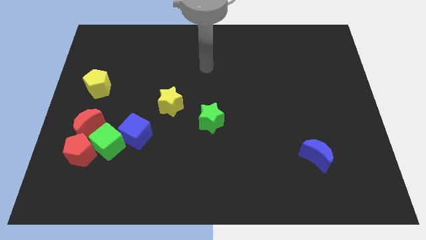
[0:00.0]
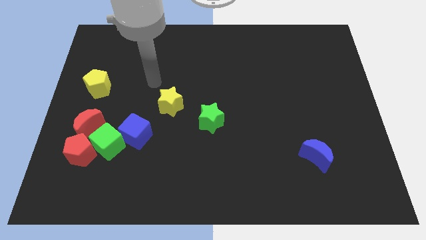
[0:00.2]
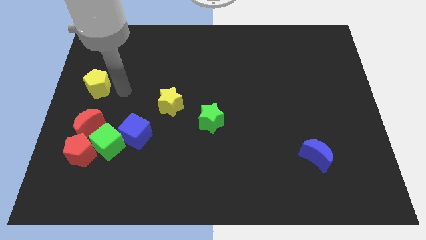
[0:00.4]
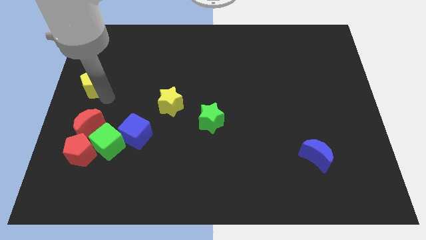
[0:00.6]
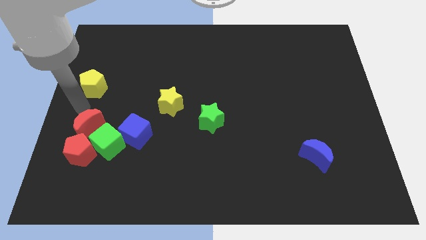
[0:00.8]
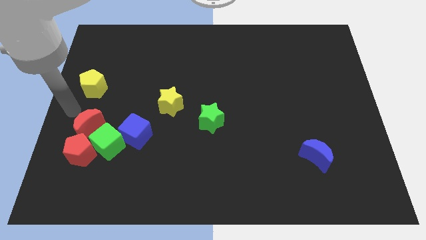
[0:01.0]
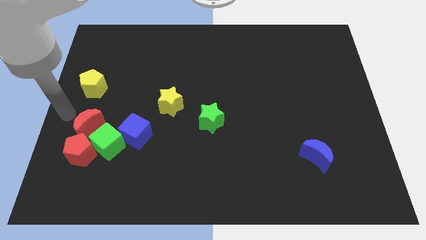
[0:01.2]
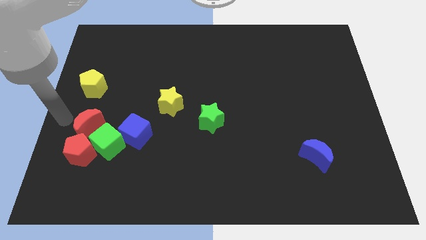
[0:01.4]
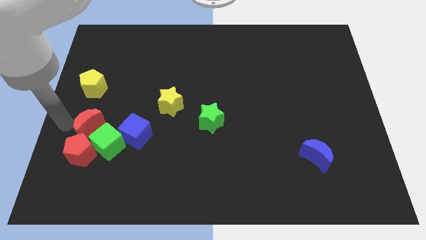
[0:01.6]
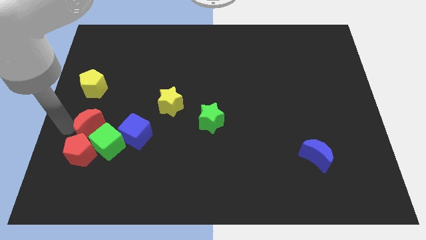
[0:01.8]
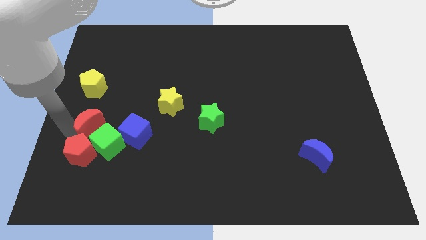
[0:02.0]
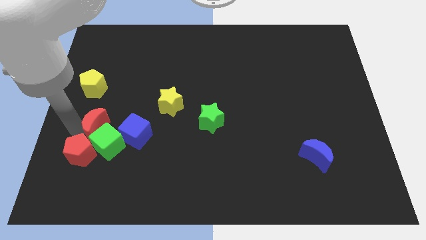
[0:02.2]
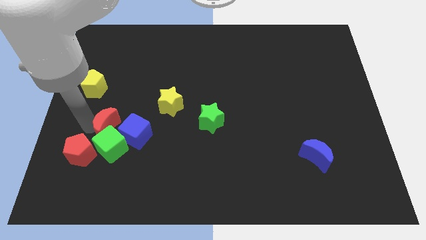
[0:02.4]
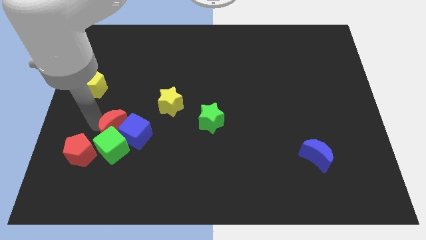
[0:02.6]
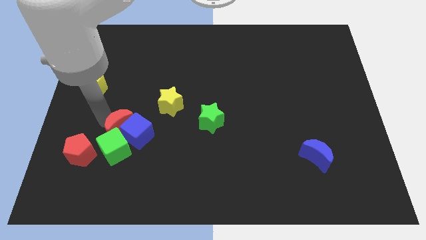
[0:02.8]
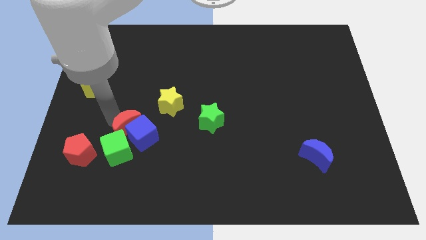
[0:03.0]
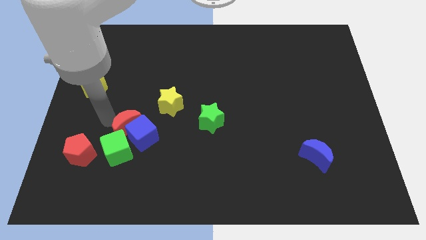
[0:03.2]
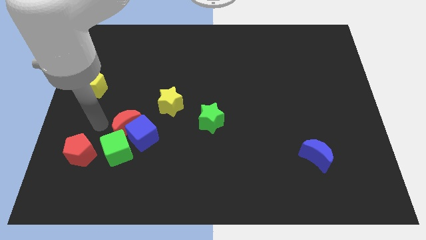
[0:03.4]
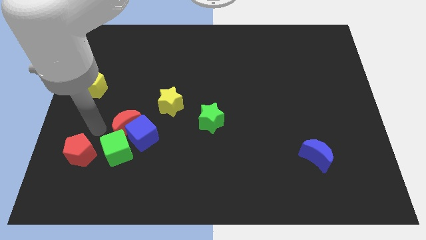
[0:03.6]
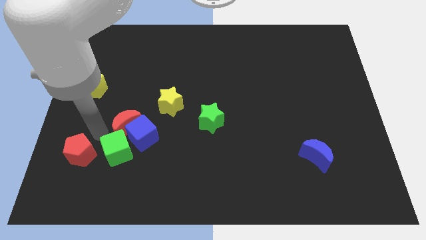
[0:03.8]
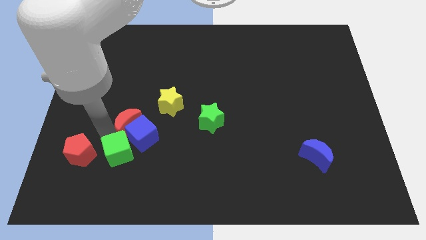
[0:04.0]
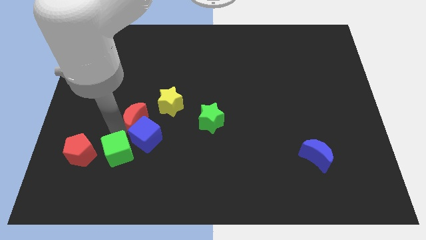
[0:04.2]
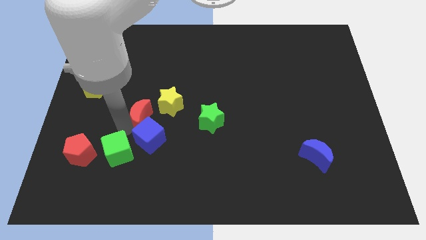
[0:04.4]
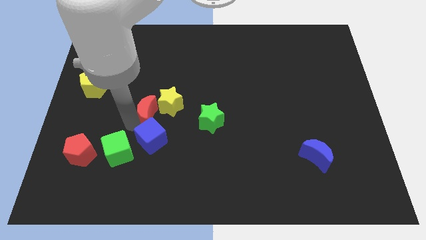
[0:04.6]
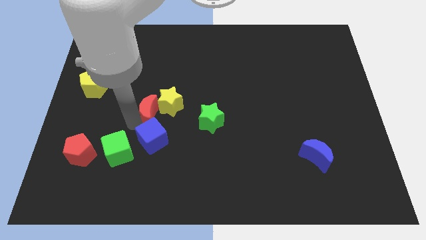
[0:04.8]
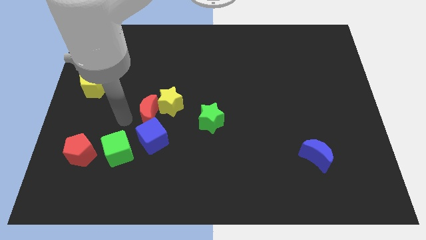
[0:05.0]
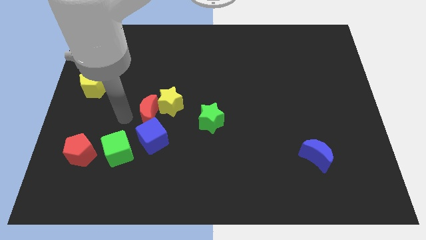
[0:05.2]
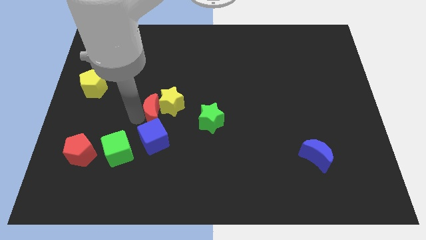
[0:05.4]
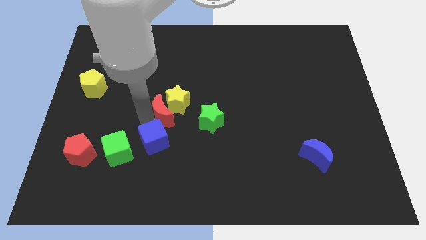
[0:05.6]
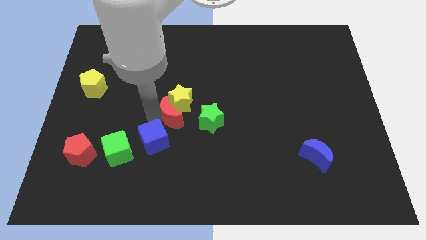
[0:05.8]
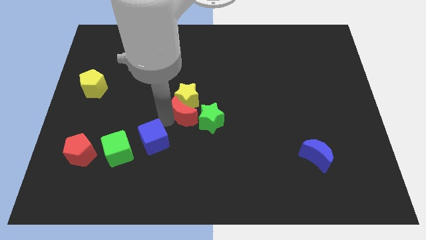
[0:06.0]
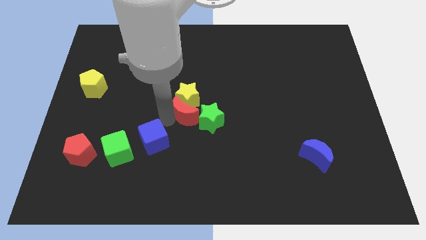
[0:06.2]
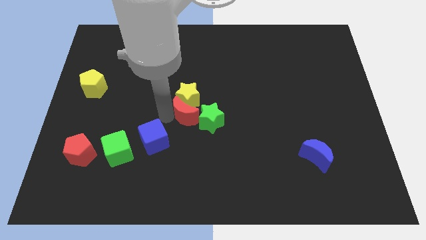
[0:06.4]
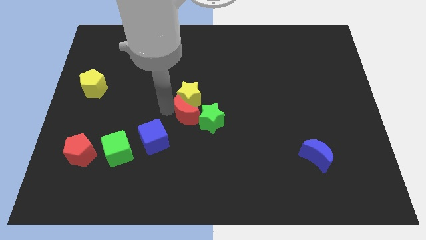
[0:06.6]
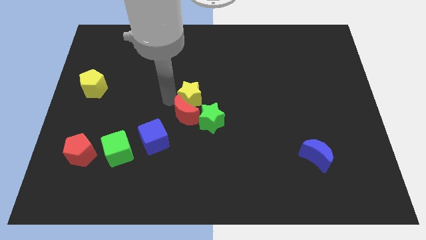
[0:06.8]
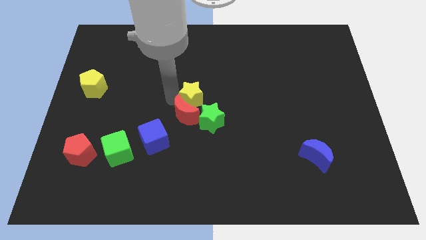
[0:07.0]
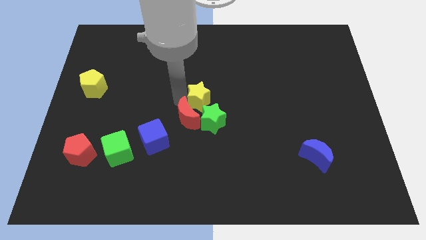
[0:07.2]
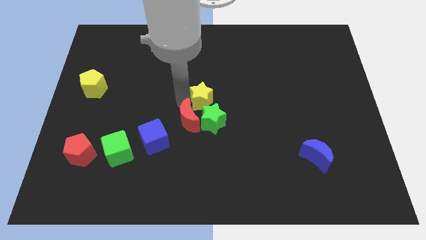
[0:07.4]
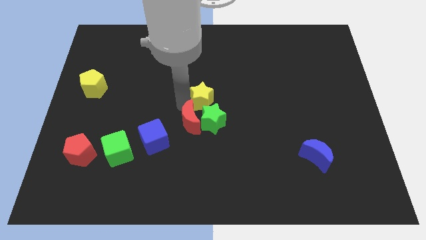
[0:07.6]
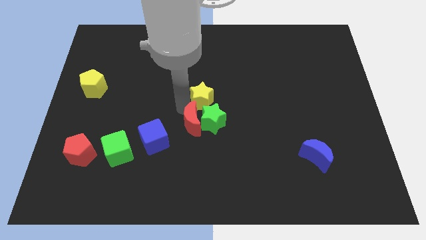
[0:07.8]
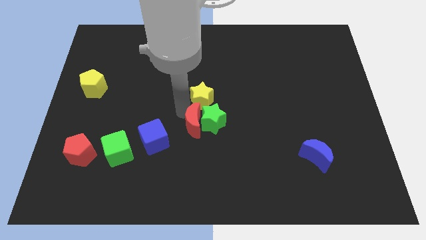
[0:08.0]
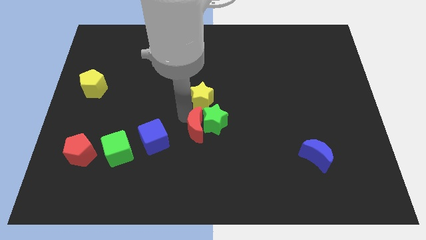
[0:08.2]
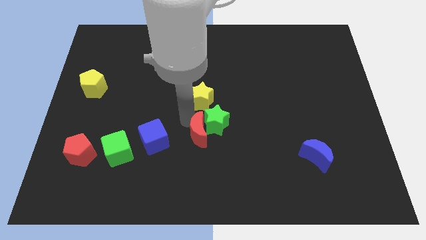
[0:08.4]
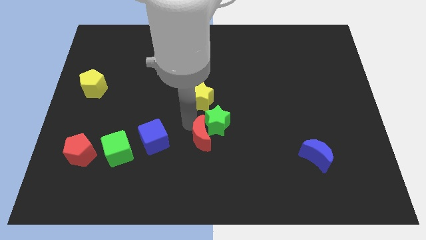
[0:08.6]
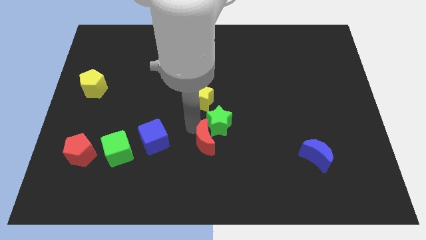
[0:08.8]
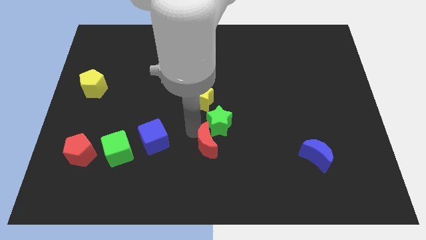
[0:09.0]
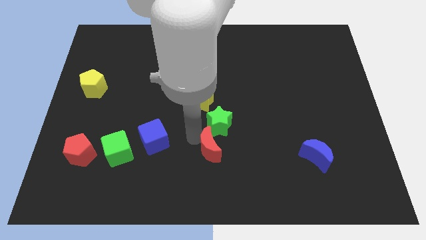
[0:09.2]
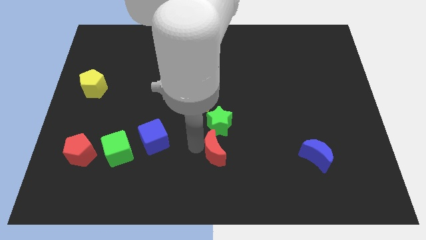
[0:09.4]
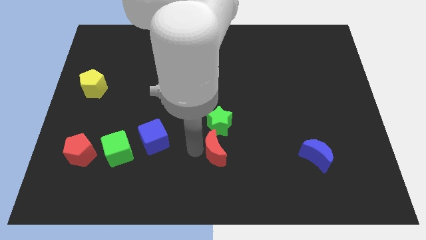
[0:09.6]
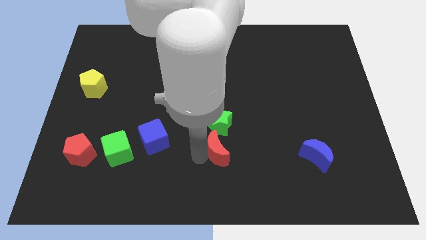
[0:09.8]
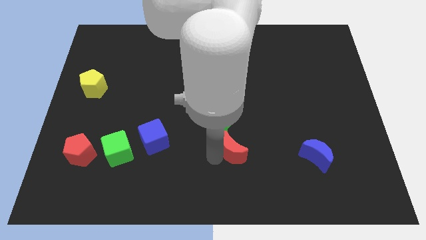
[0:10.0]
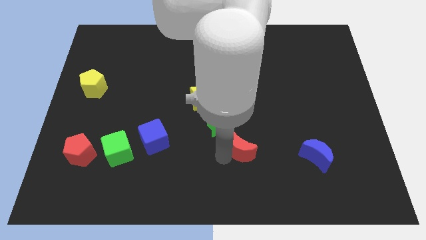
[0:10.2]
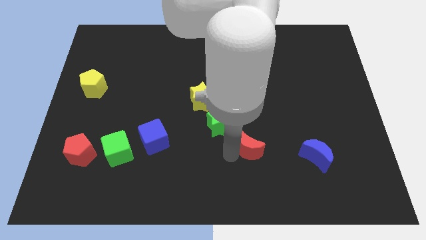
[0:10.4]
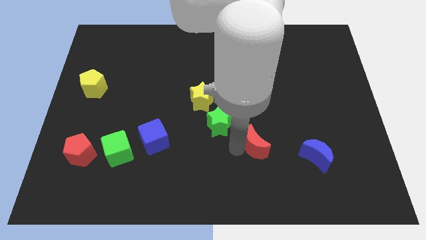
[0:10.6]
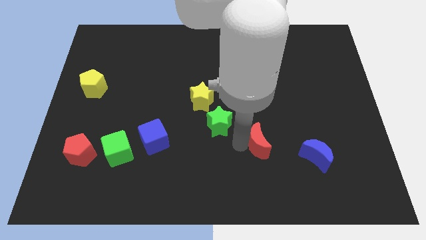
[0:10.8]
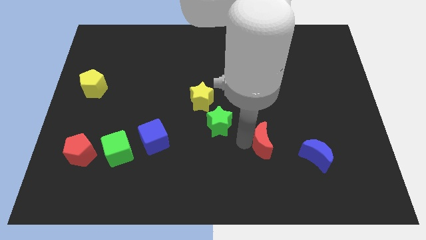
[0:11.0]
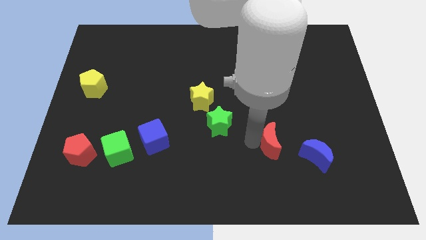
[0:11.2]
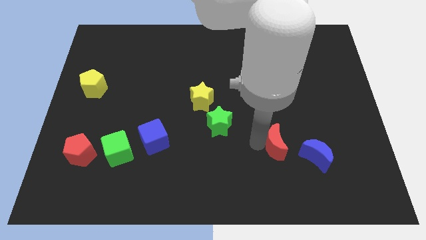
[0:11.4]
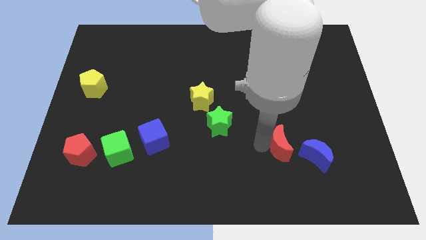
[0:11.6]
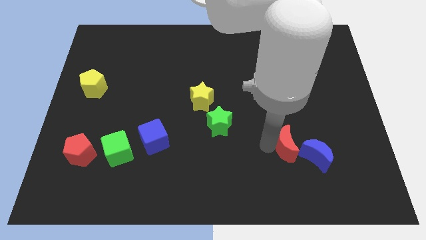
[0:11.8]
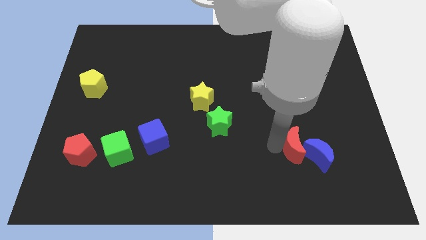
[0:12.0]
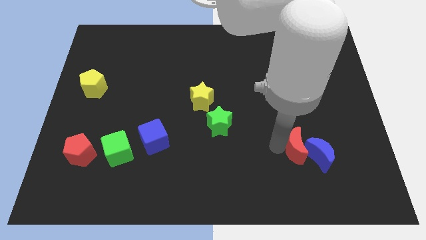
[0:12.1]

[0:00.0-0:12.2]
move the red moon towards the blue moon

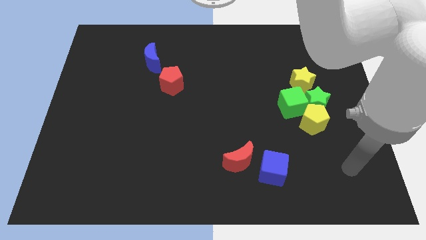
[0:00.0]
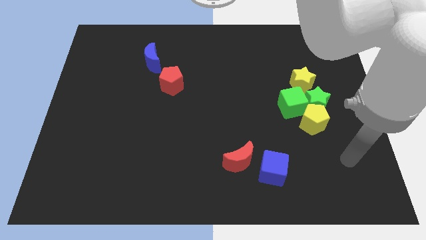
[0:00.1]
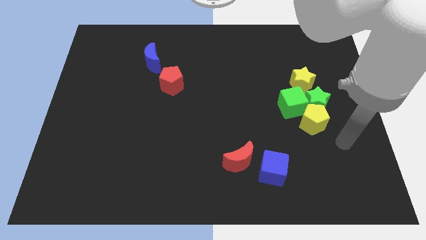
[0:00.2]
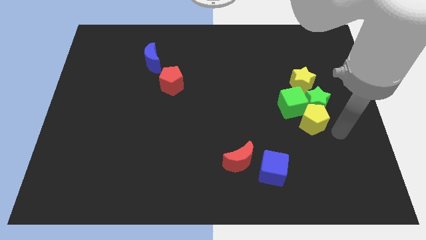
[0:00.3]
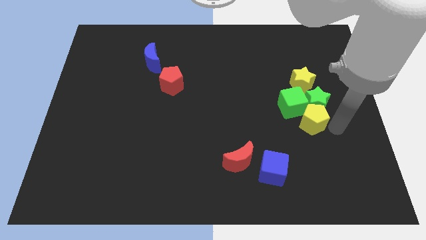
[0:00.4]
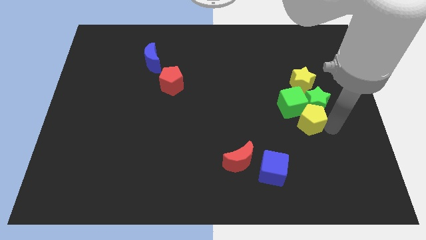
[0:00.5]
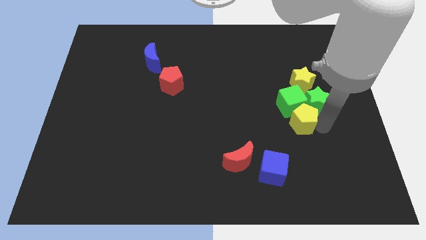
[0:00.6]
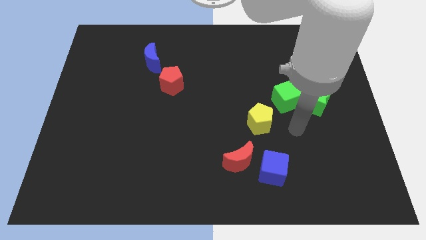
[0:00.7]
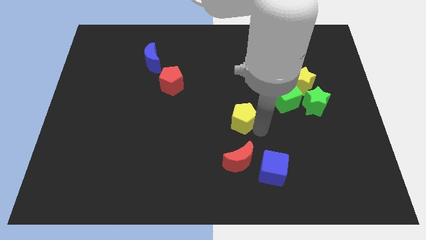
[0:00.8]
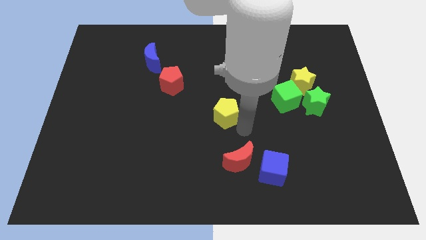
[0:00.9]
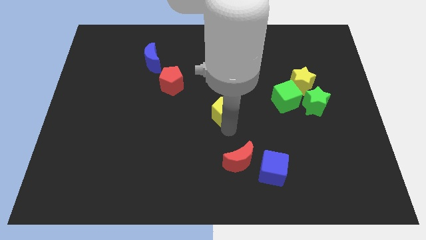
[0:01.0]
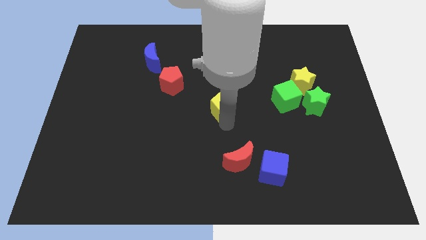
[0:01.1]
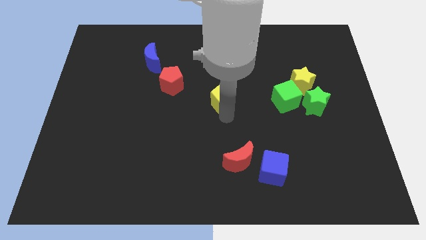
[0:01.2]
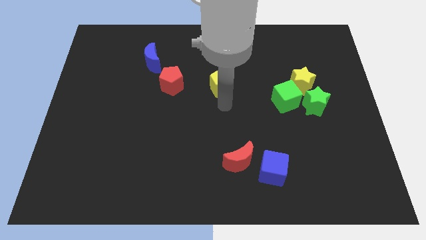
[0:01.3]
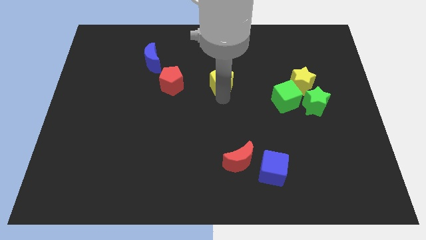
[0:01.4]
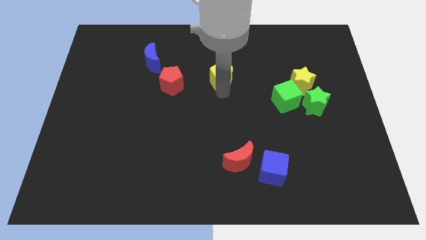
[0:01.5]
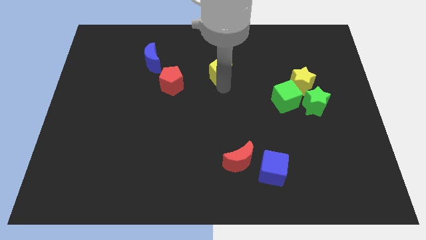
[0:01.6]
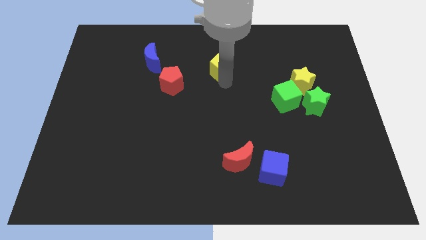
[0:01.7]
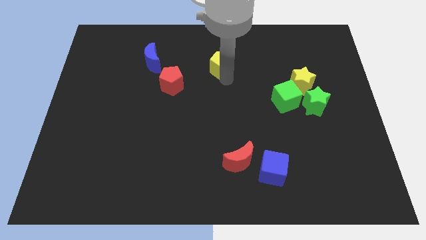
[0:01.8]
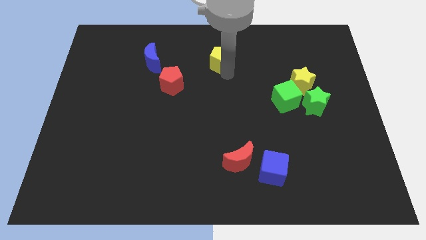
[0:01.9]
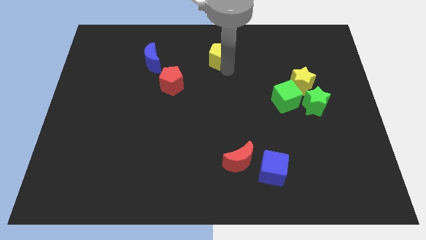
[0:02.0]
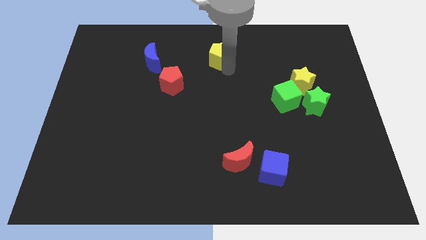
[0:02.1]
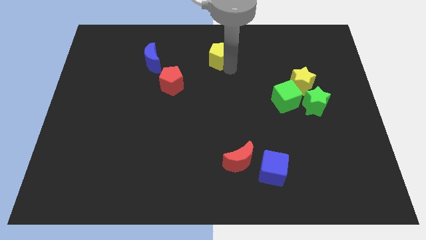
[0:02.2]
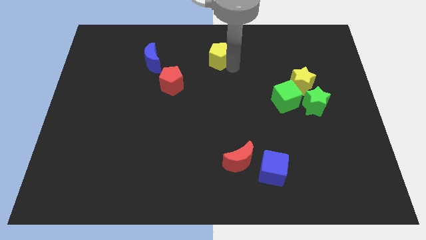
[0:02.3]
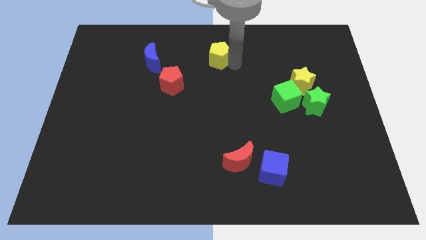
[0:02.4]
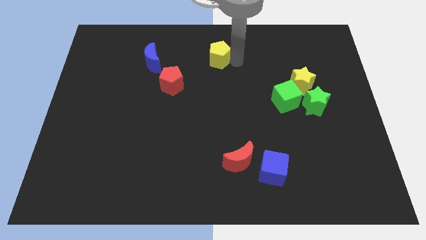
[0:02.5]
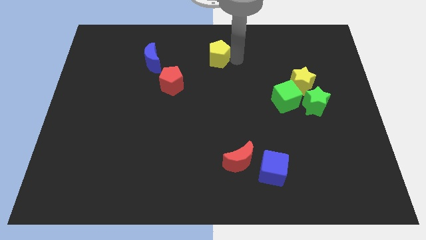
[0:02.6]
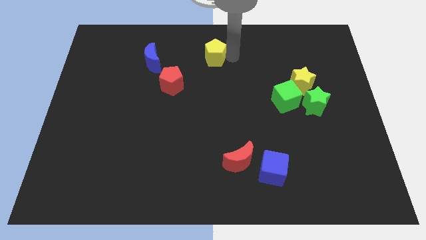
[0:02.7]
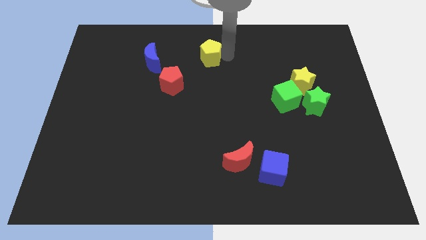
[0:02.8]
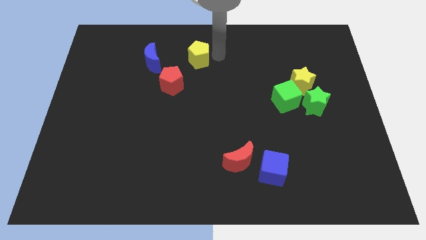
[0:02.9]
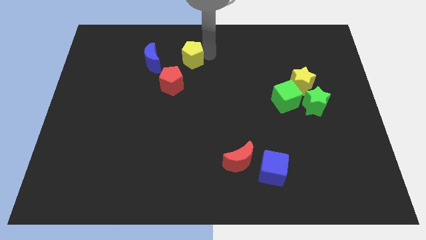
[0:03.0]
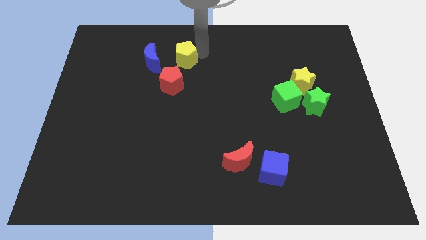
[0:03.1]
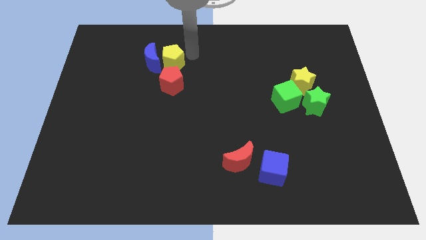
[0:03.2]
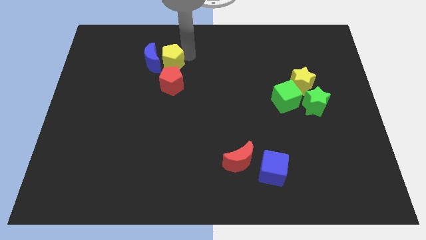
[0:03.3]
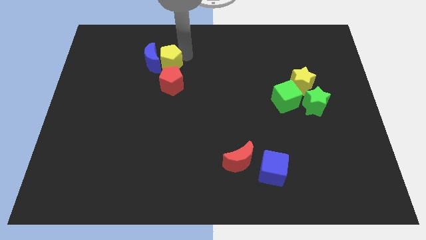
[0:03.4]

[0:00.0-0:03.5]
slide the yellow pentagon next to the blue moon
